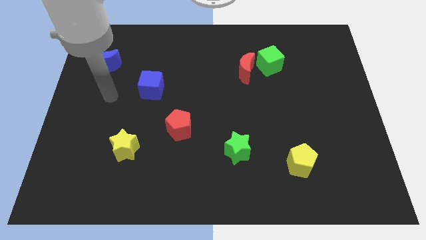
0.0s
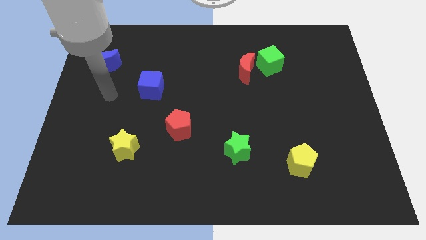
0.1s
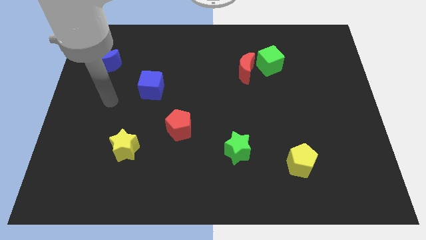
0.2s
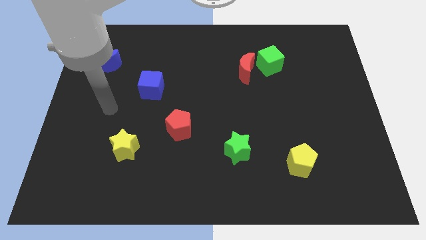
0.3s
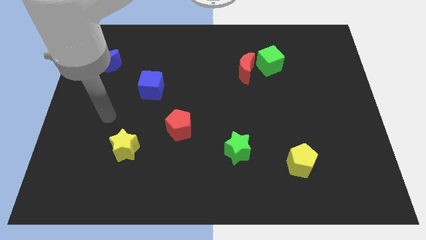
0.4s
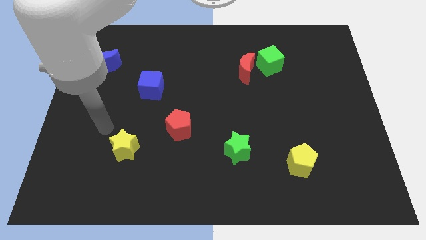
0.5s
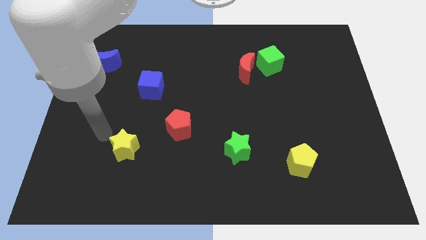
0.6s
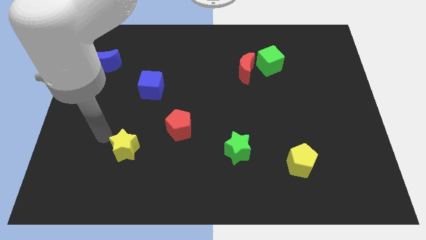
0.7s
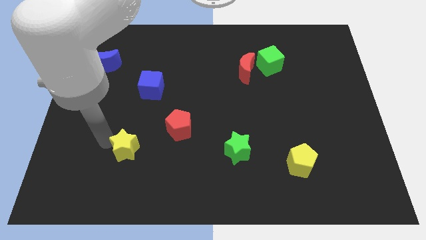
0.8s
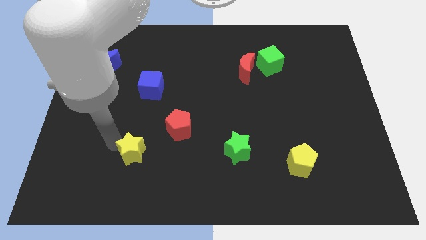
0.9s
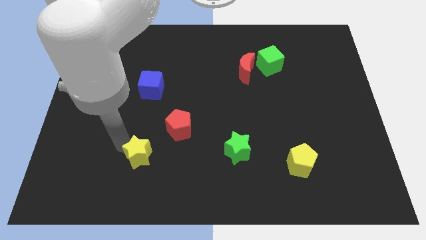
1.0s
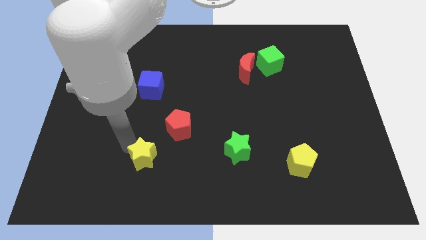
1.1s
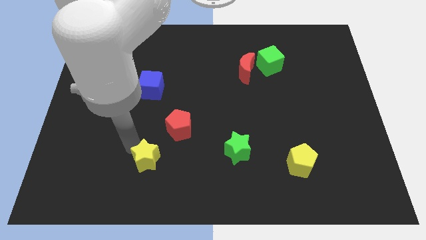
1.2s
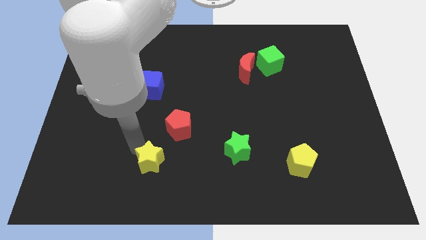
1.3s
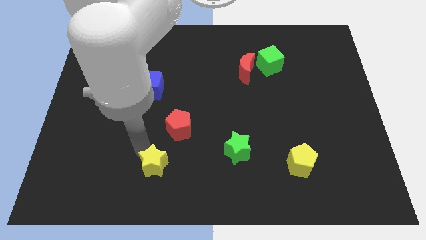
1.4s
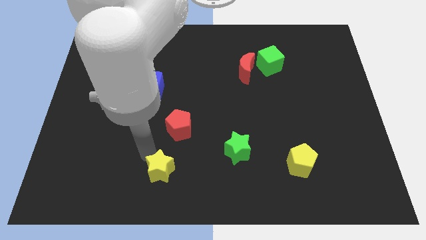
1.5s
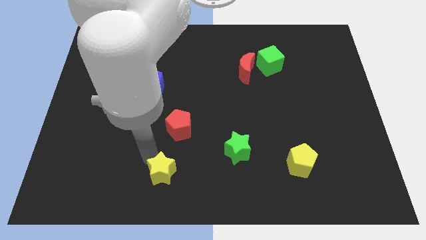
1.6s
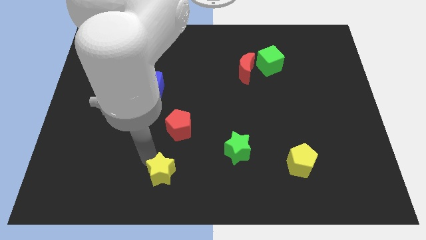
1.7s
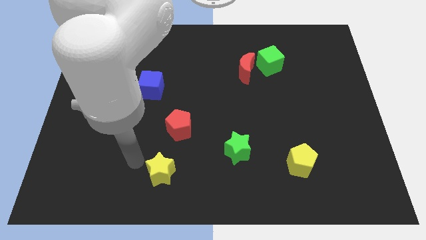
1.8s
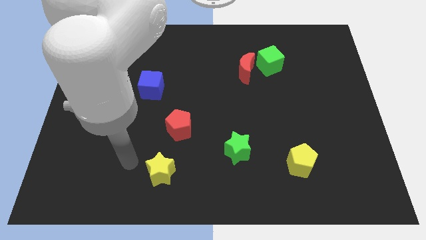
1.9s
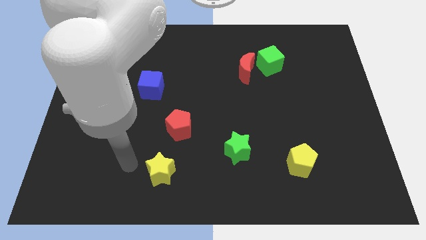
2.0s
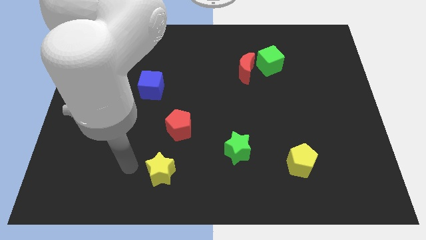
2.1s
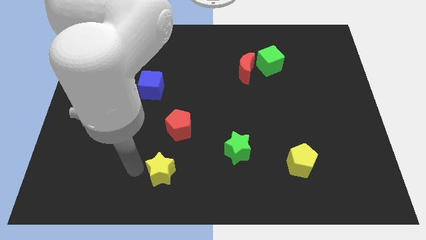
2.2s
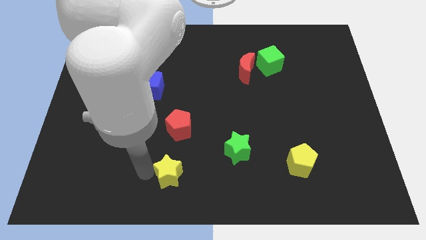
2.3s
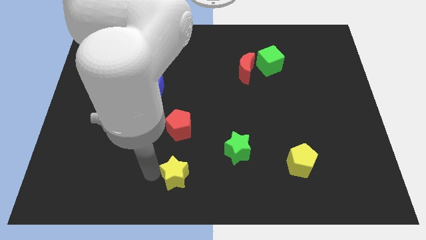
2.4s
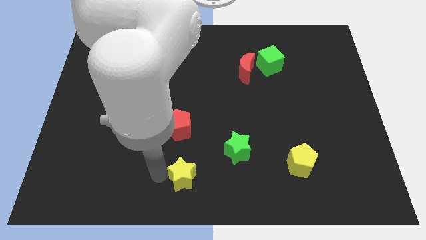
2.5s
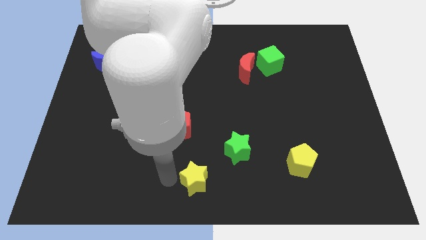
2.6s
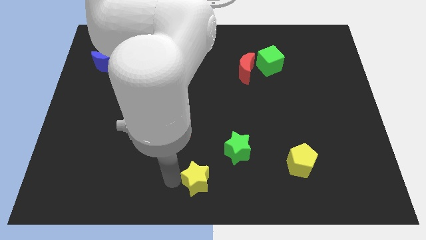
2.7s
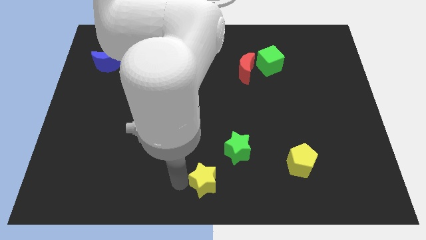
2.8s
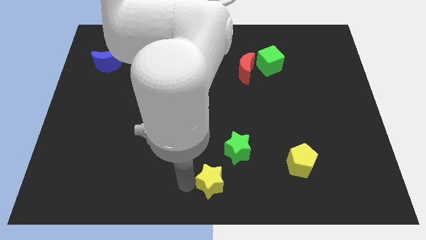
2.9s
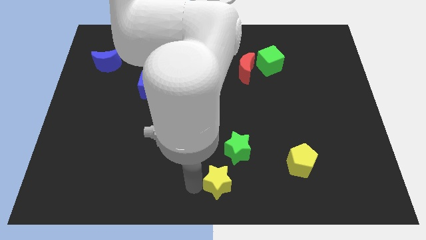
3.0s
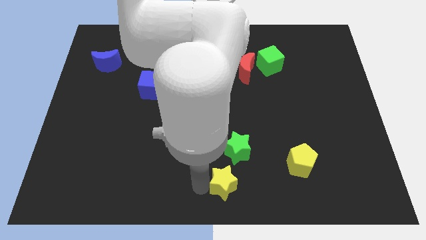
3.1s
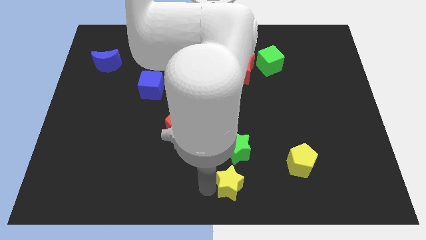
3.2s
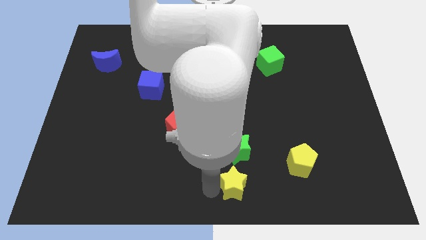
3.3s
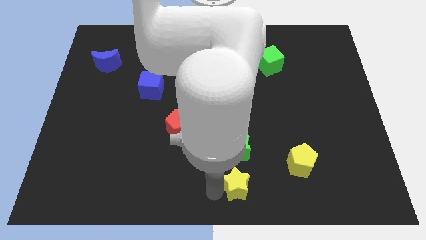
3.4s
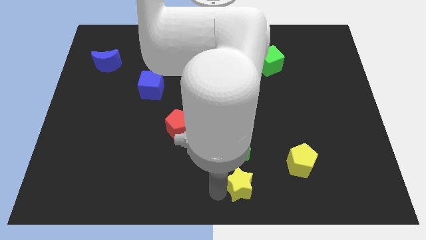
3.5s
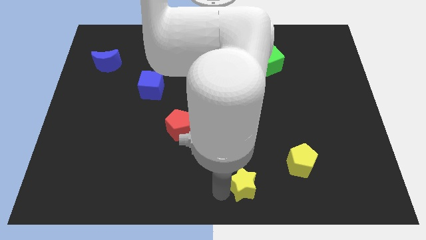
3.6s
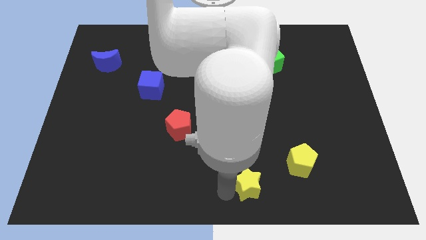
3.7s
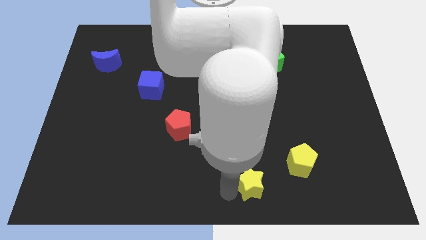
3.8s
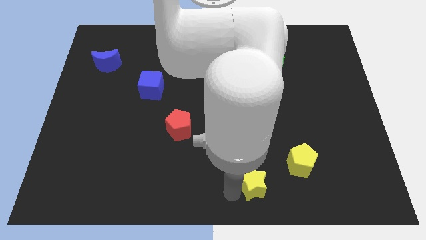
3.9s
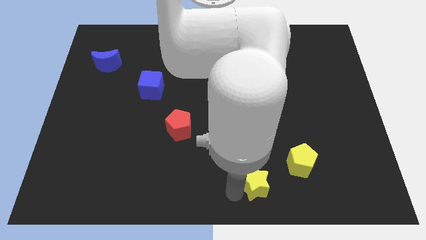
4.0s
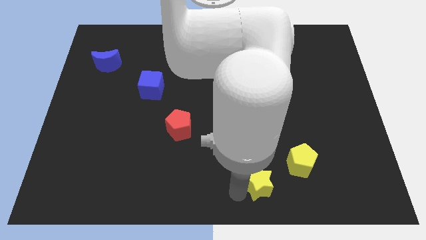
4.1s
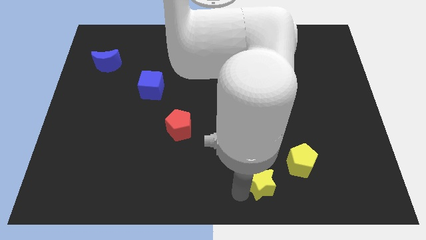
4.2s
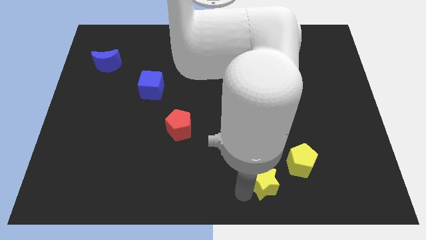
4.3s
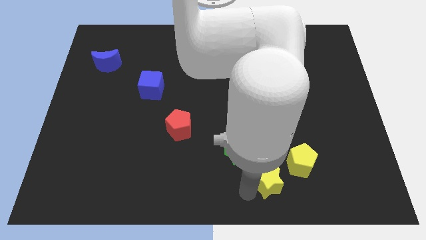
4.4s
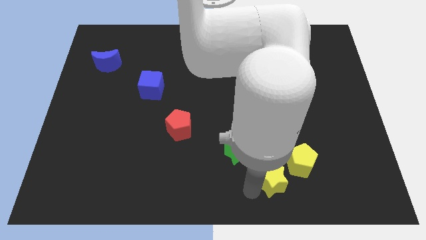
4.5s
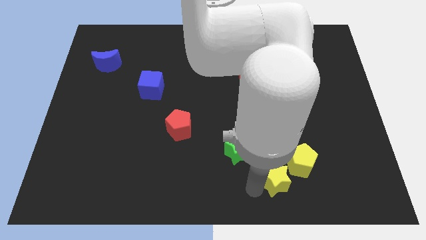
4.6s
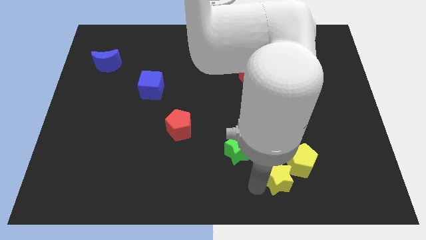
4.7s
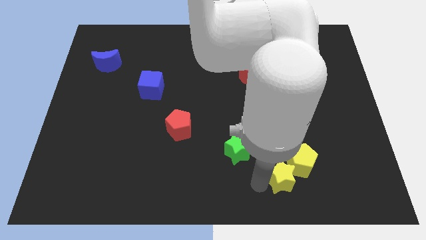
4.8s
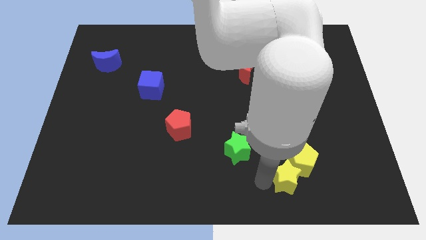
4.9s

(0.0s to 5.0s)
put the yellow star close to the yellow pentagon

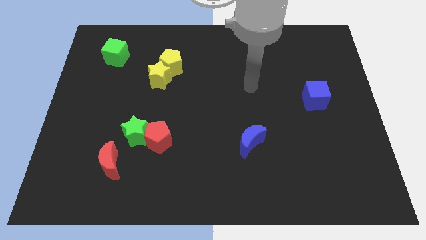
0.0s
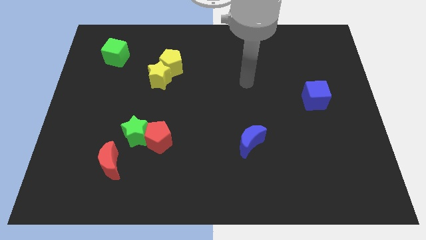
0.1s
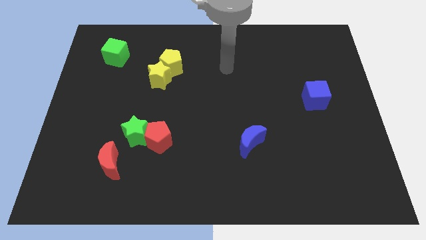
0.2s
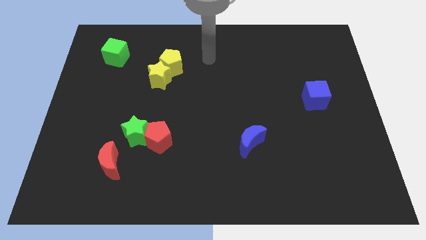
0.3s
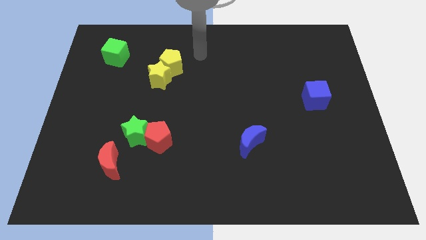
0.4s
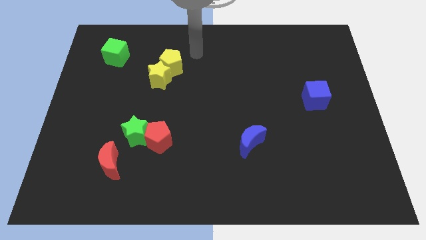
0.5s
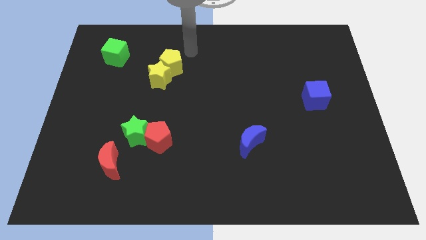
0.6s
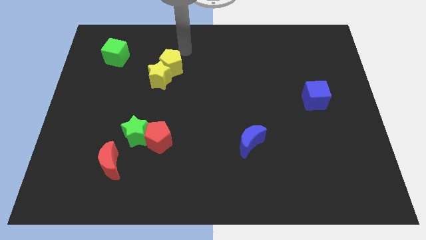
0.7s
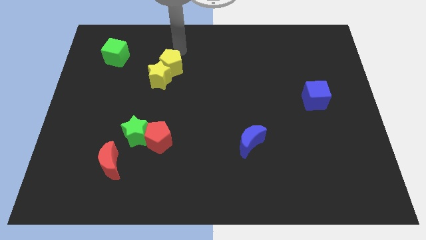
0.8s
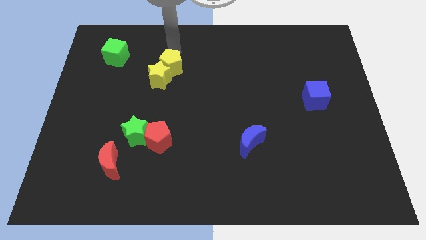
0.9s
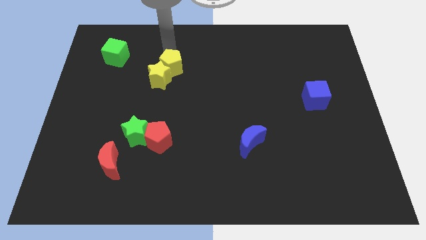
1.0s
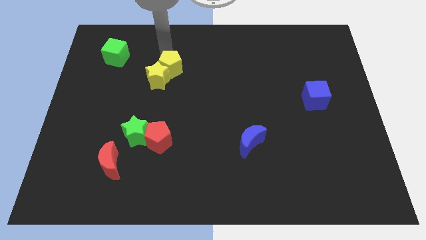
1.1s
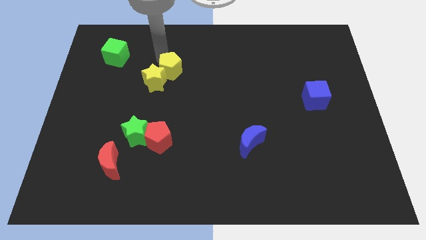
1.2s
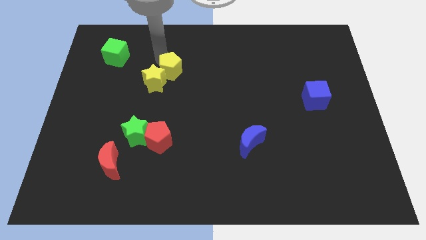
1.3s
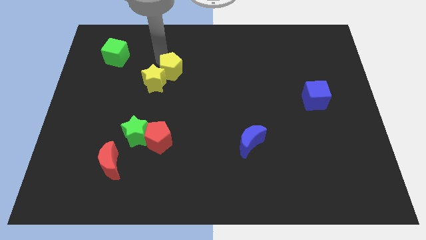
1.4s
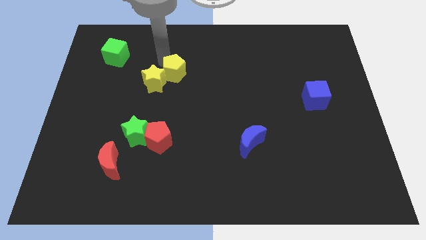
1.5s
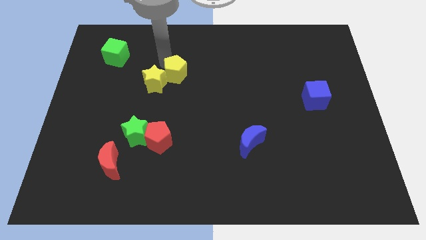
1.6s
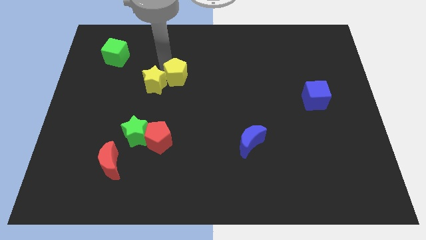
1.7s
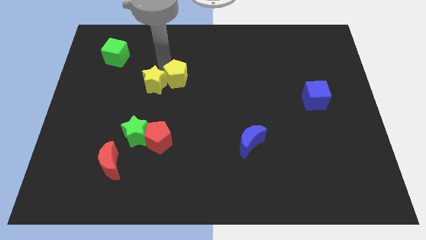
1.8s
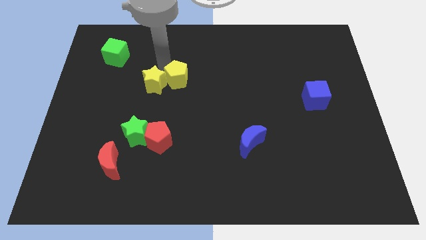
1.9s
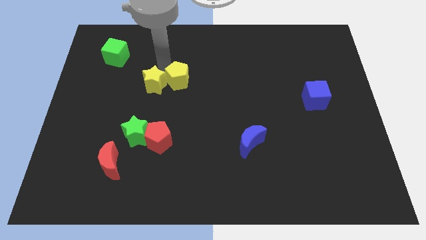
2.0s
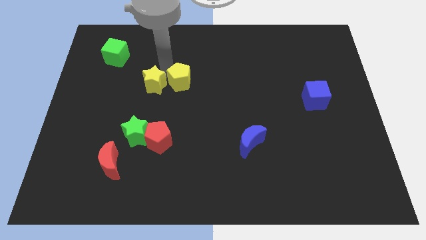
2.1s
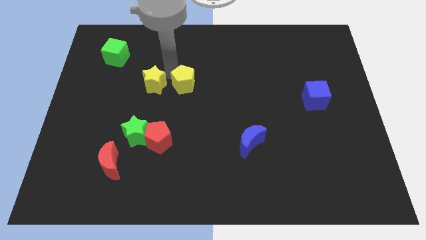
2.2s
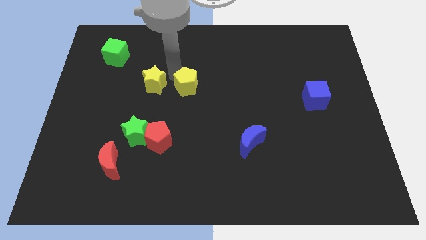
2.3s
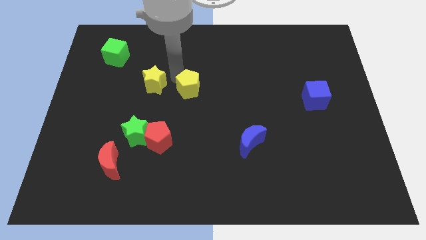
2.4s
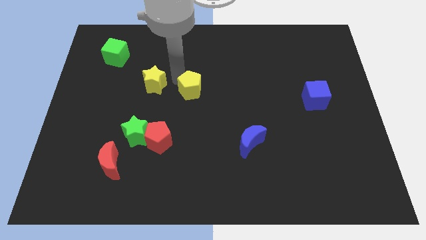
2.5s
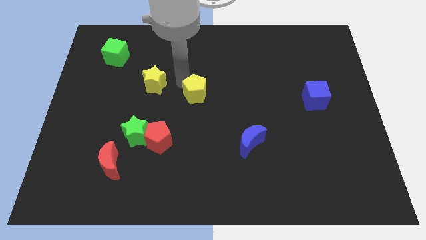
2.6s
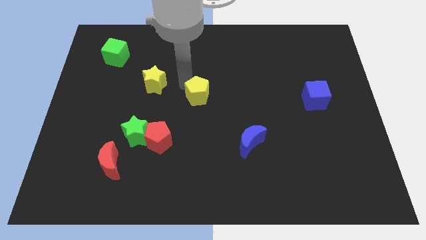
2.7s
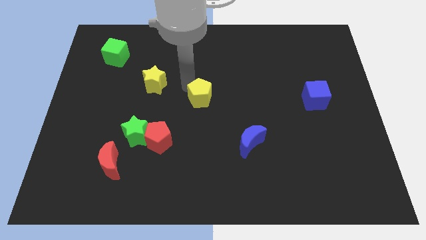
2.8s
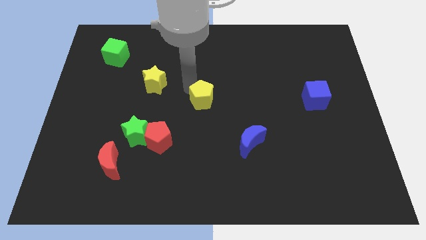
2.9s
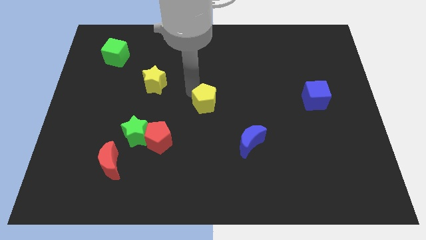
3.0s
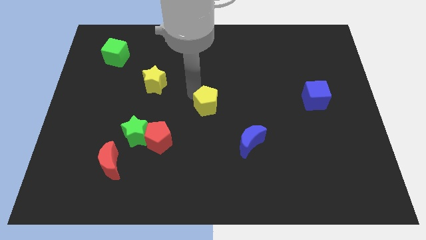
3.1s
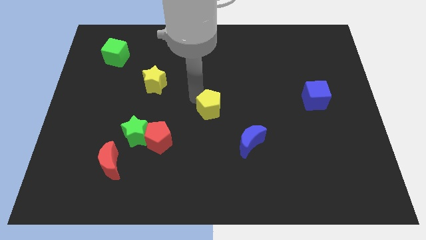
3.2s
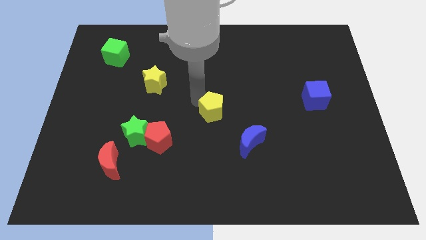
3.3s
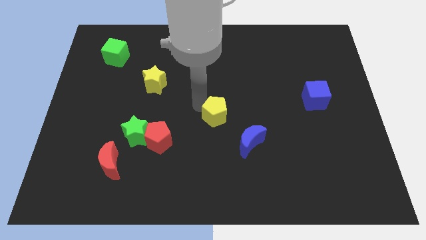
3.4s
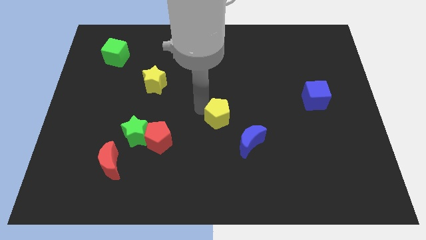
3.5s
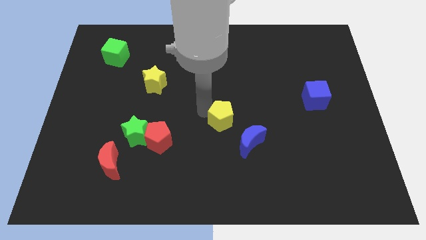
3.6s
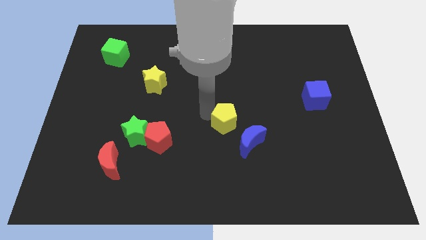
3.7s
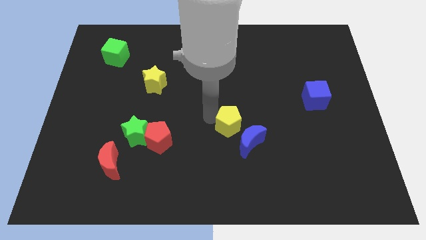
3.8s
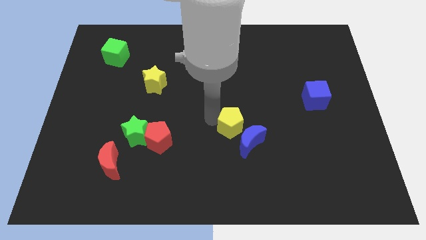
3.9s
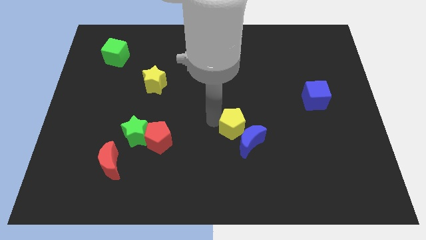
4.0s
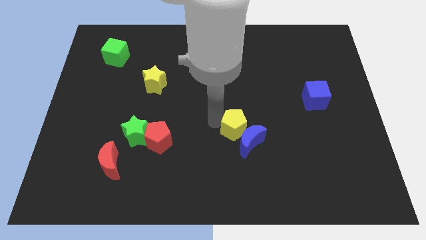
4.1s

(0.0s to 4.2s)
slide the yellow pentagon towards the blue moon
